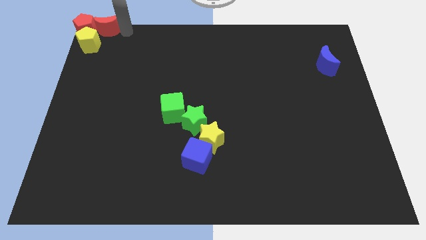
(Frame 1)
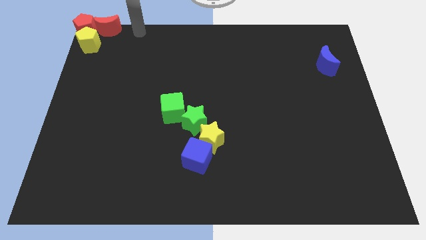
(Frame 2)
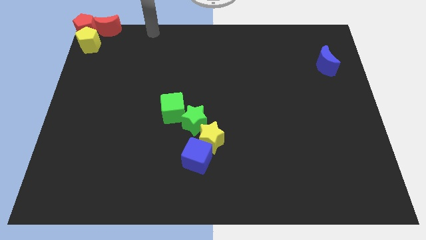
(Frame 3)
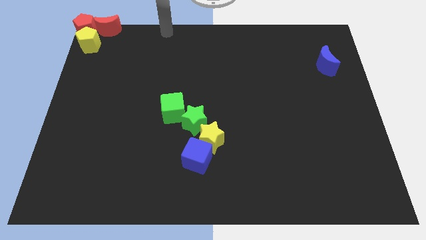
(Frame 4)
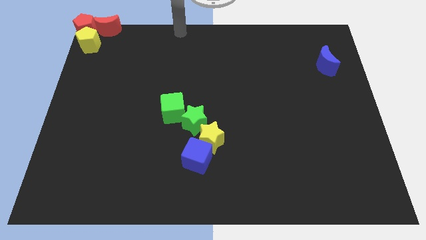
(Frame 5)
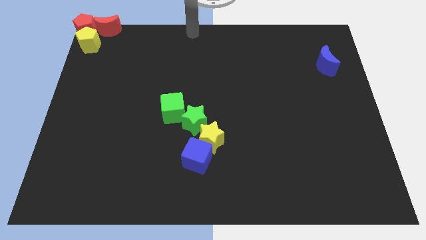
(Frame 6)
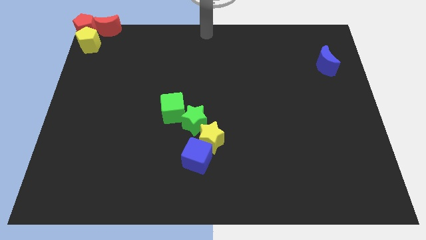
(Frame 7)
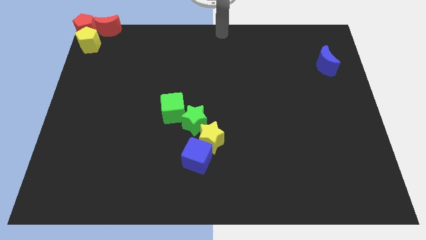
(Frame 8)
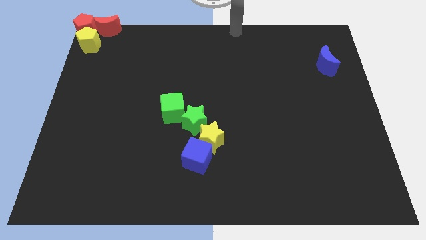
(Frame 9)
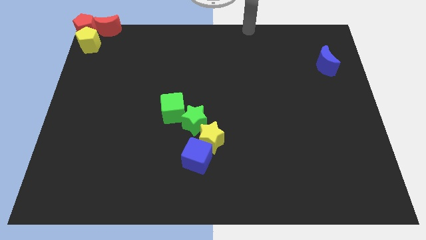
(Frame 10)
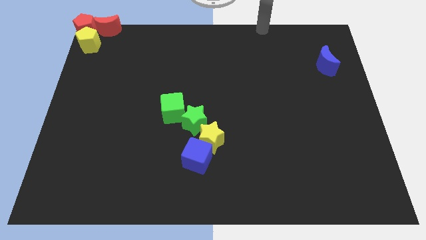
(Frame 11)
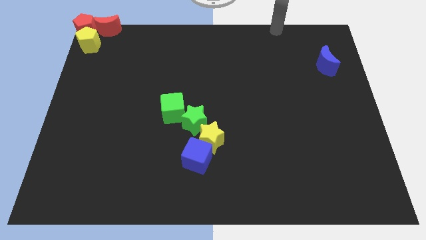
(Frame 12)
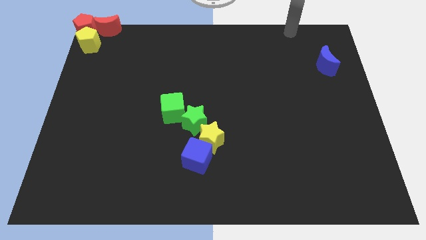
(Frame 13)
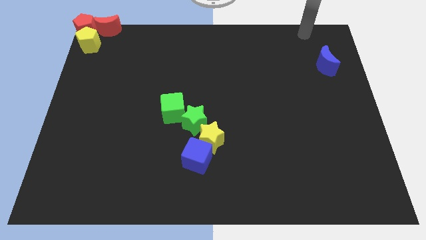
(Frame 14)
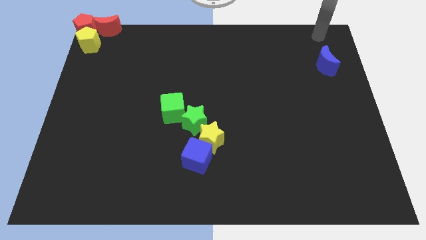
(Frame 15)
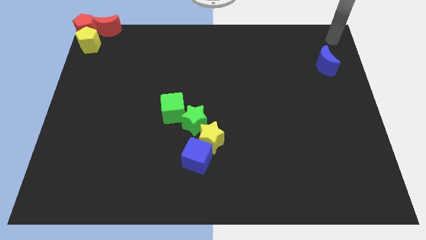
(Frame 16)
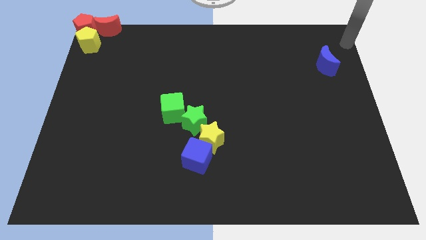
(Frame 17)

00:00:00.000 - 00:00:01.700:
go away from the red moon

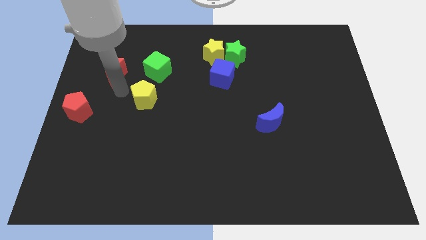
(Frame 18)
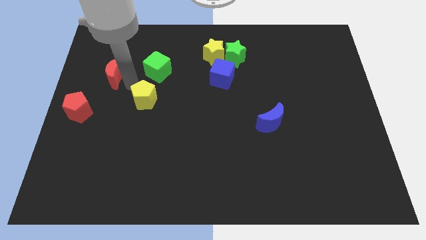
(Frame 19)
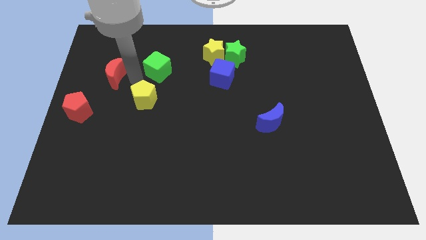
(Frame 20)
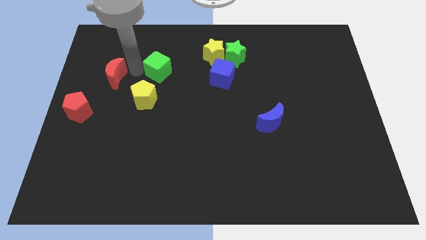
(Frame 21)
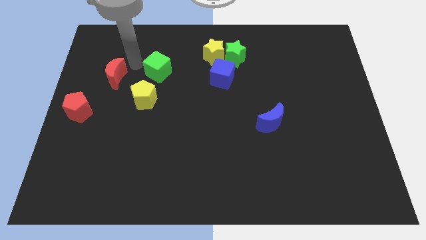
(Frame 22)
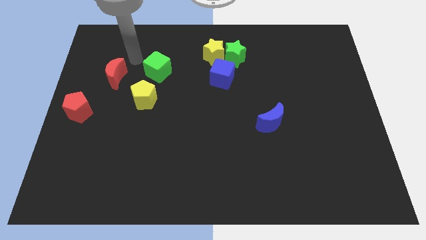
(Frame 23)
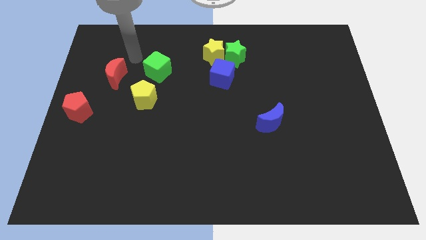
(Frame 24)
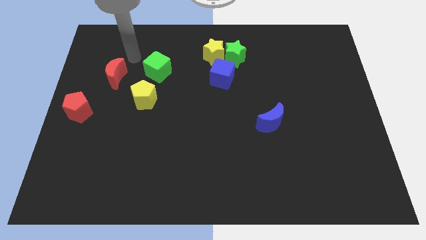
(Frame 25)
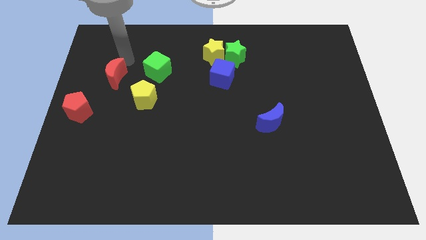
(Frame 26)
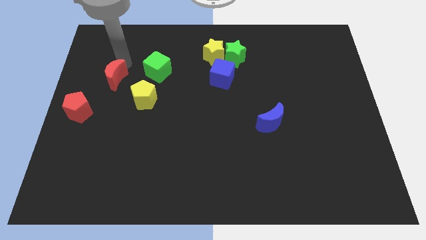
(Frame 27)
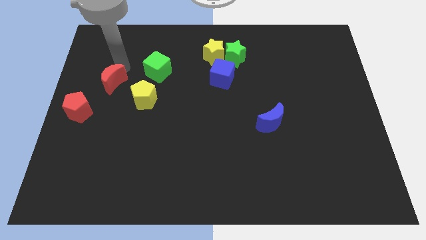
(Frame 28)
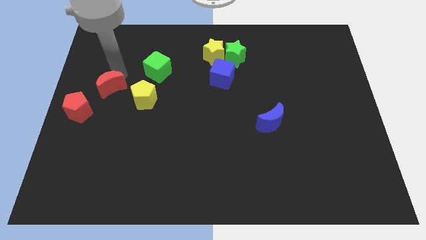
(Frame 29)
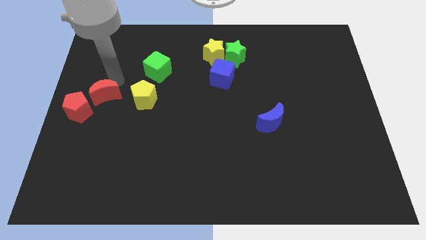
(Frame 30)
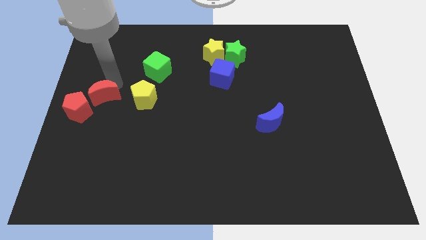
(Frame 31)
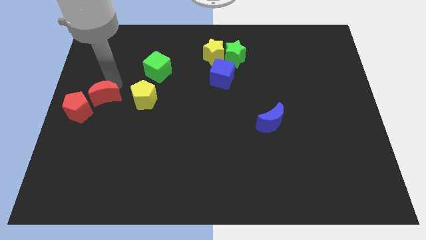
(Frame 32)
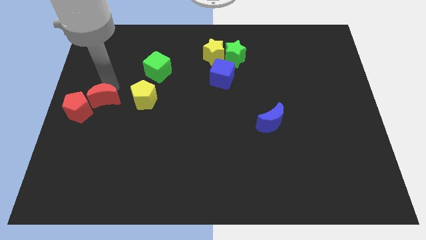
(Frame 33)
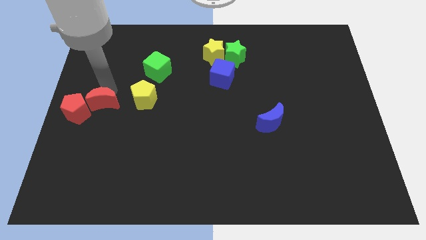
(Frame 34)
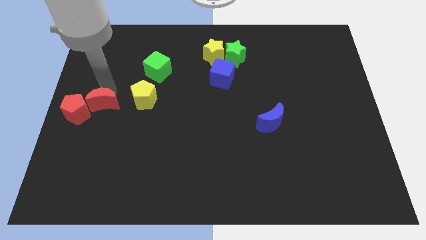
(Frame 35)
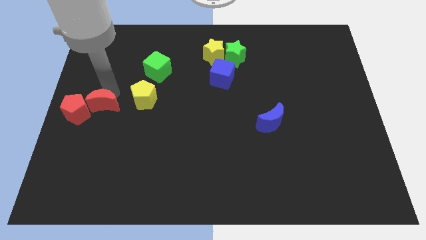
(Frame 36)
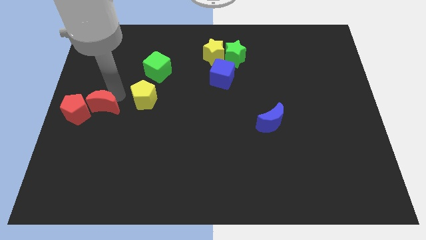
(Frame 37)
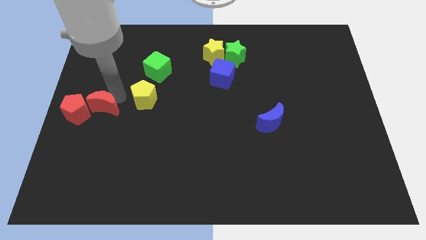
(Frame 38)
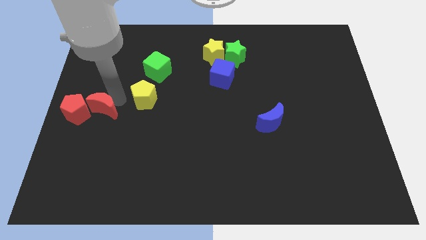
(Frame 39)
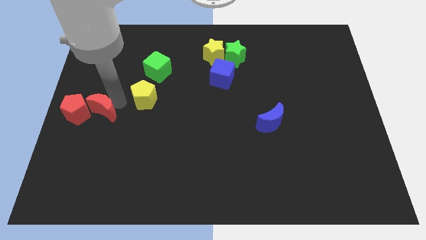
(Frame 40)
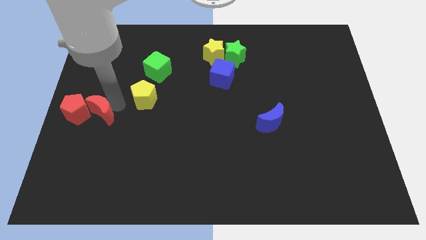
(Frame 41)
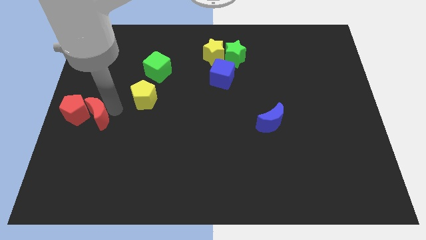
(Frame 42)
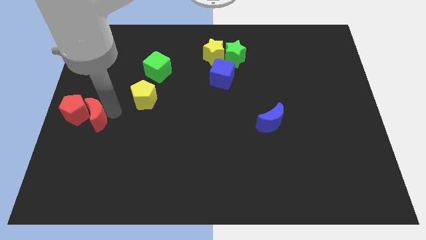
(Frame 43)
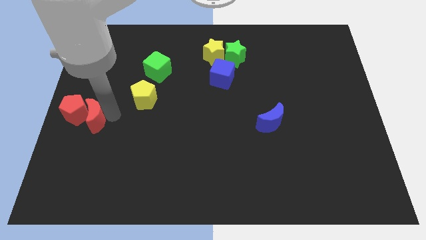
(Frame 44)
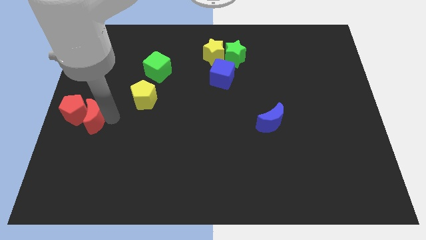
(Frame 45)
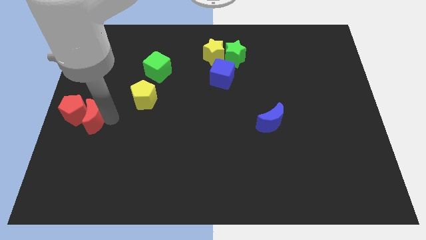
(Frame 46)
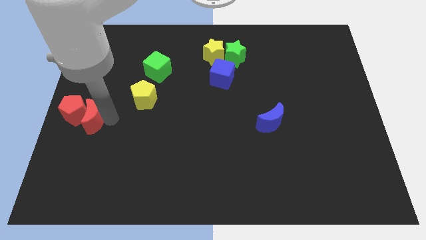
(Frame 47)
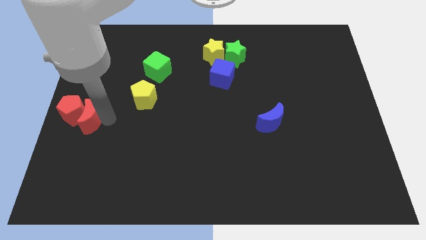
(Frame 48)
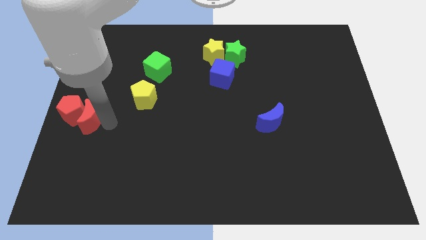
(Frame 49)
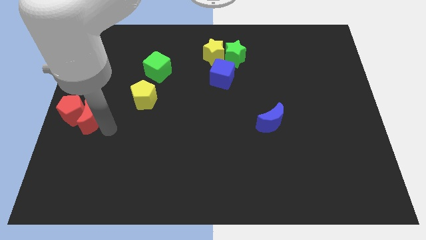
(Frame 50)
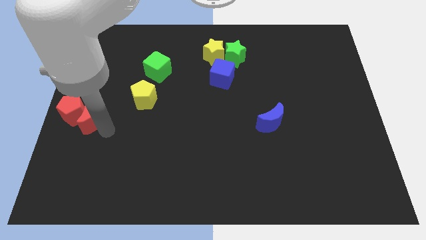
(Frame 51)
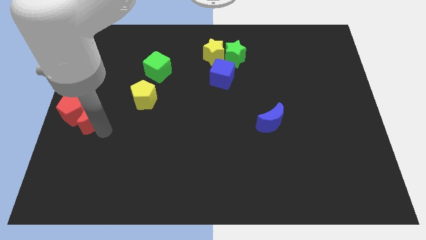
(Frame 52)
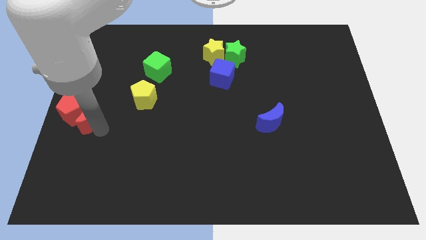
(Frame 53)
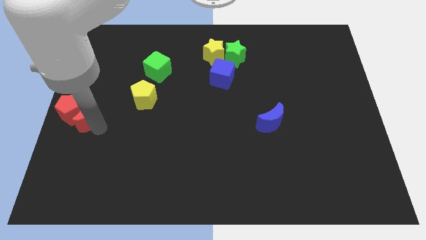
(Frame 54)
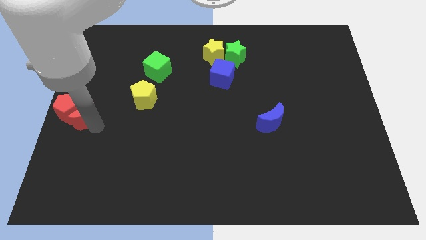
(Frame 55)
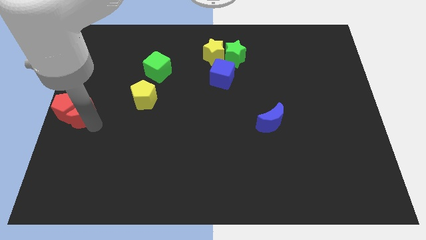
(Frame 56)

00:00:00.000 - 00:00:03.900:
push red moon into the red pentagon

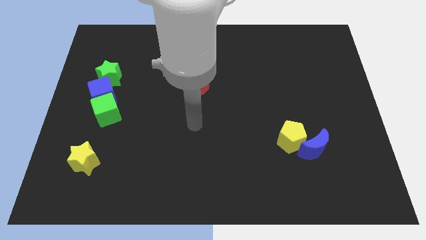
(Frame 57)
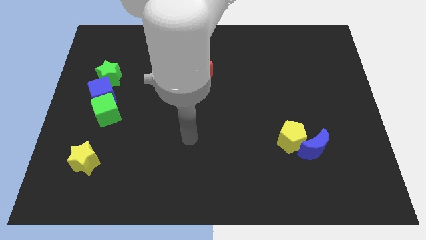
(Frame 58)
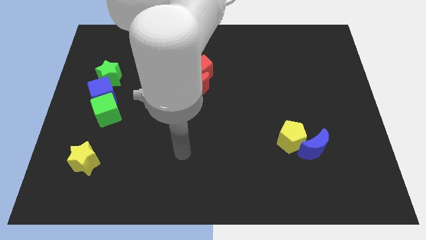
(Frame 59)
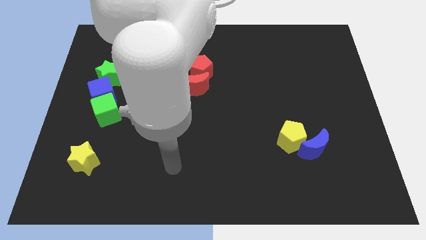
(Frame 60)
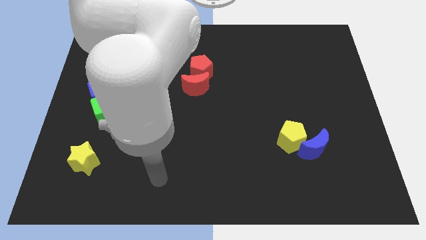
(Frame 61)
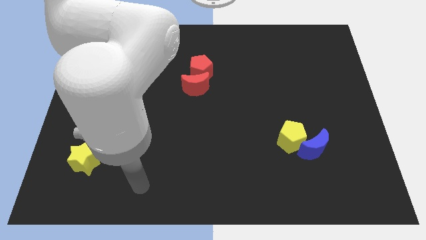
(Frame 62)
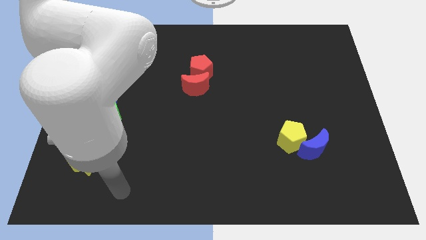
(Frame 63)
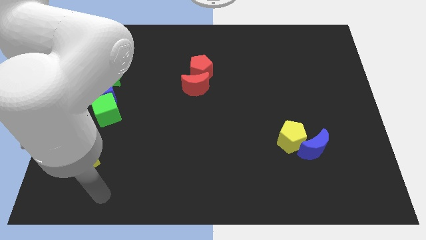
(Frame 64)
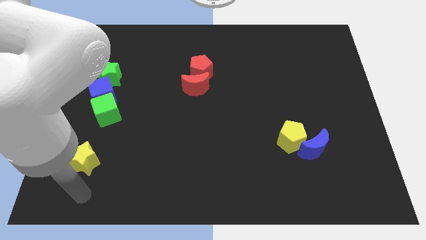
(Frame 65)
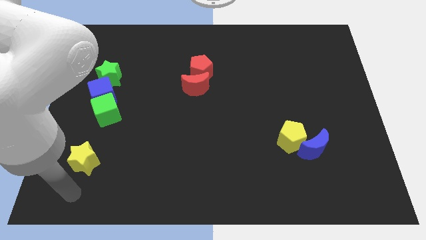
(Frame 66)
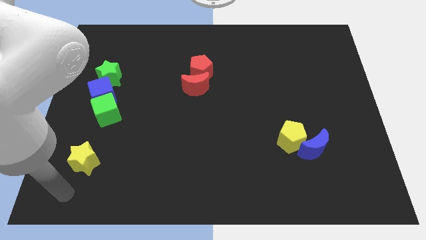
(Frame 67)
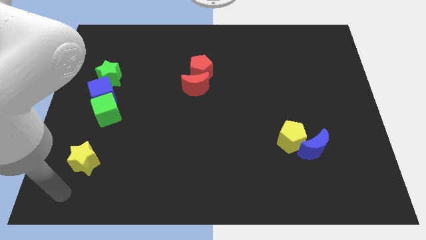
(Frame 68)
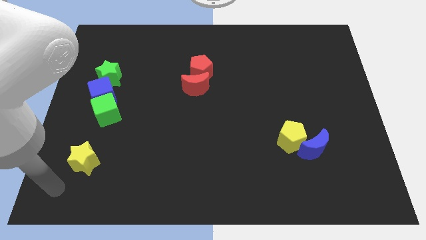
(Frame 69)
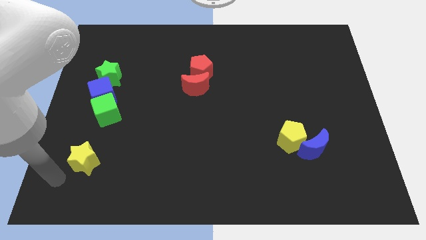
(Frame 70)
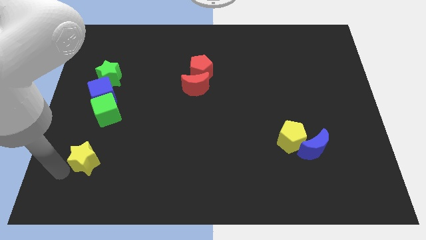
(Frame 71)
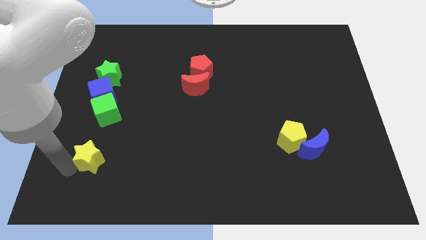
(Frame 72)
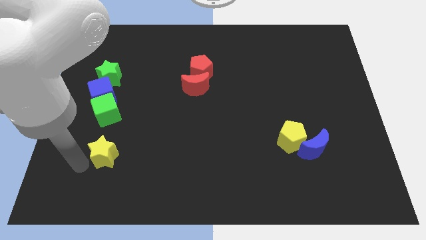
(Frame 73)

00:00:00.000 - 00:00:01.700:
slide the yellow star to the bottom side of the green cube

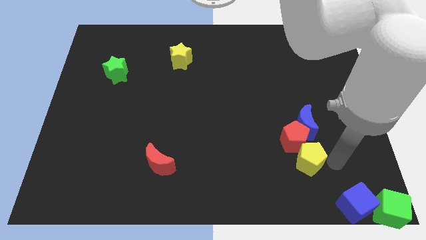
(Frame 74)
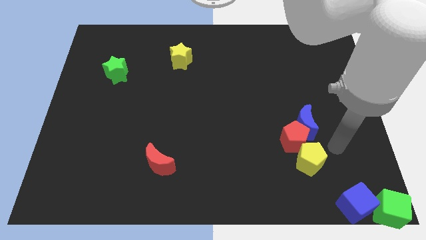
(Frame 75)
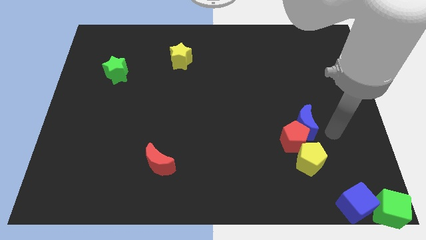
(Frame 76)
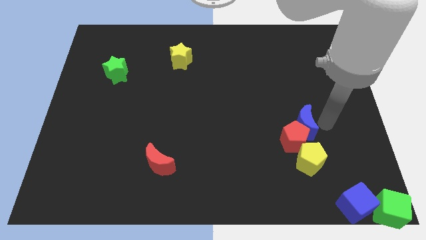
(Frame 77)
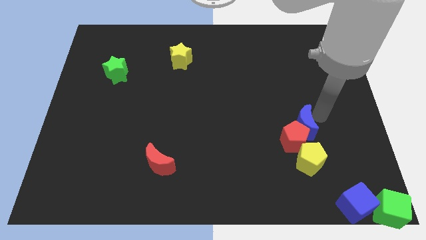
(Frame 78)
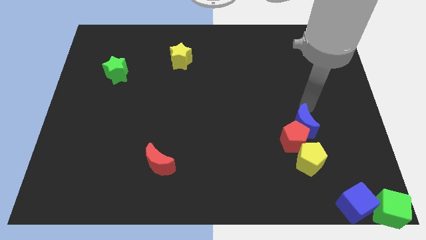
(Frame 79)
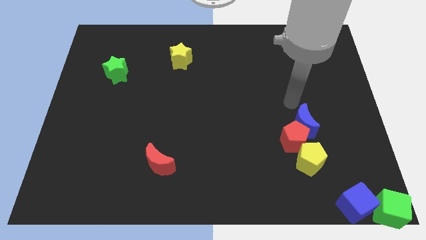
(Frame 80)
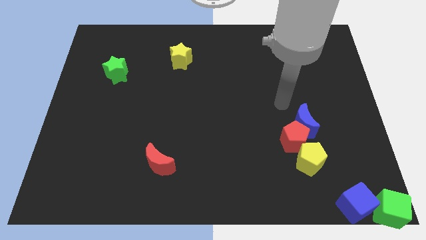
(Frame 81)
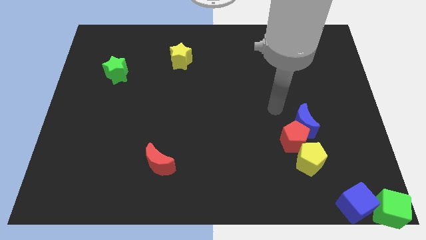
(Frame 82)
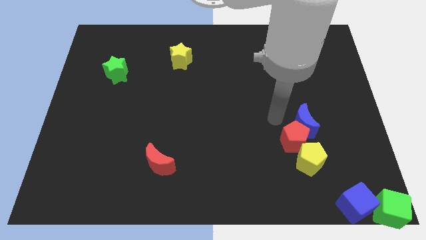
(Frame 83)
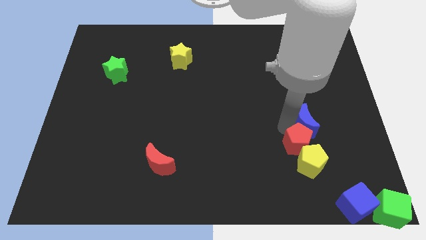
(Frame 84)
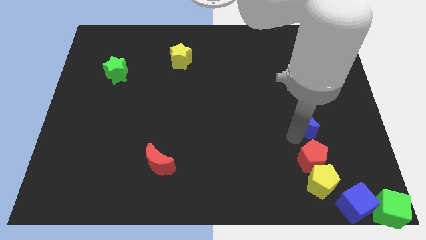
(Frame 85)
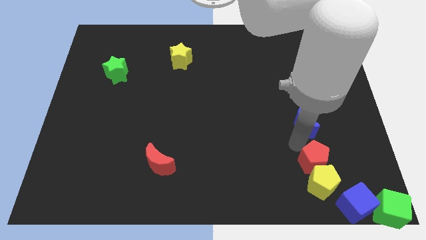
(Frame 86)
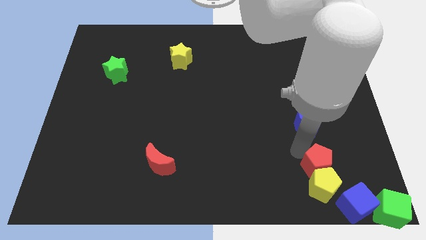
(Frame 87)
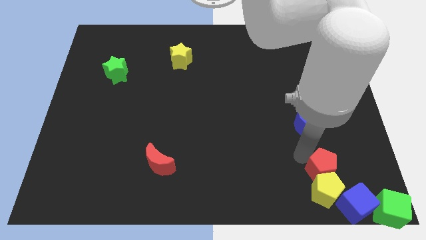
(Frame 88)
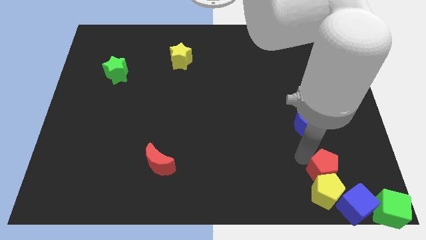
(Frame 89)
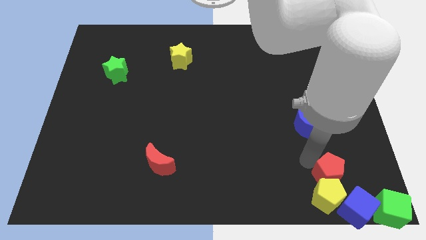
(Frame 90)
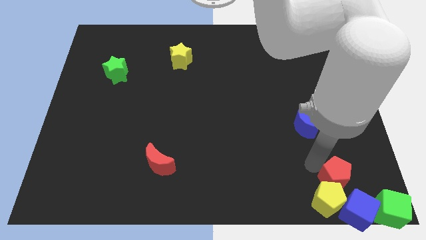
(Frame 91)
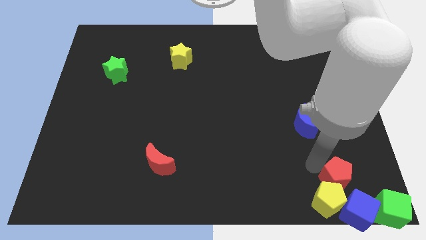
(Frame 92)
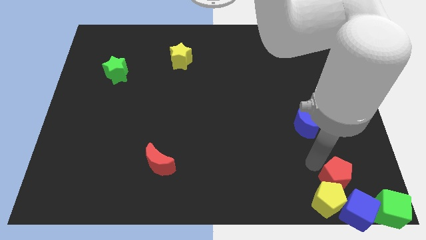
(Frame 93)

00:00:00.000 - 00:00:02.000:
push the yellow pentagon with the red pentagon
